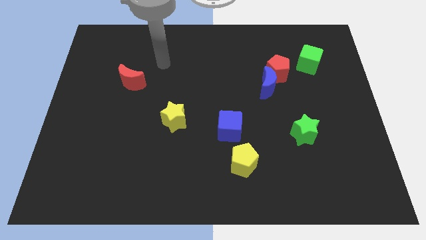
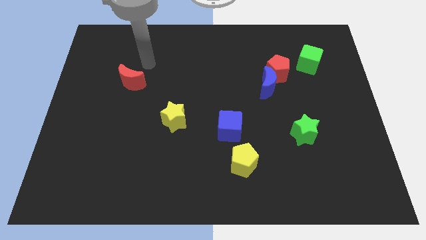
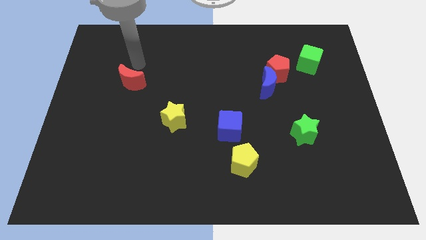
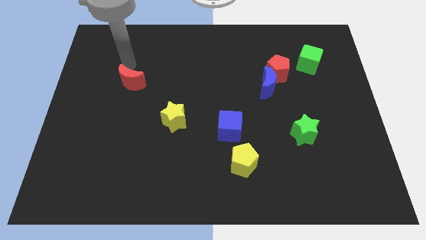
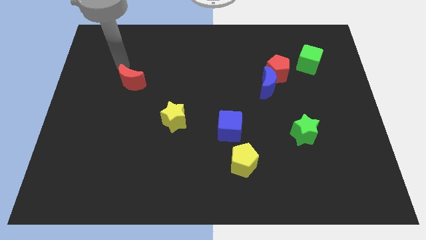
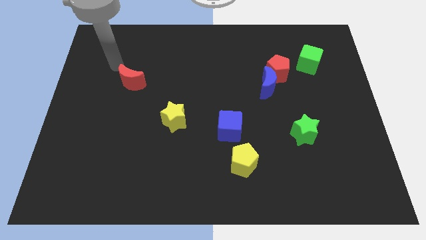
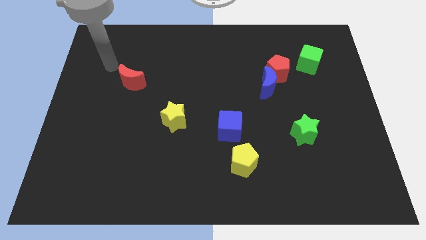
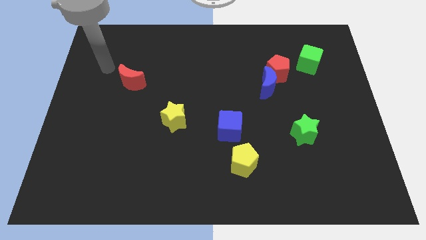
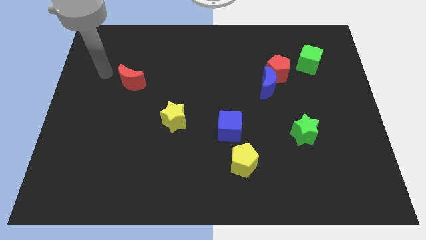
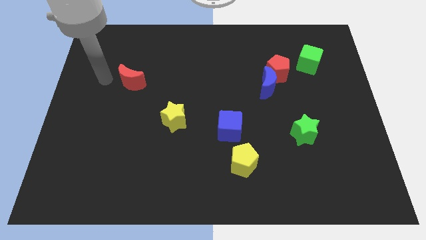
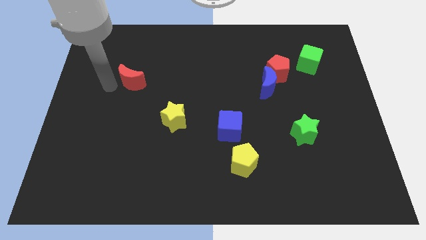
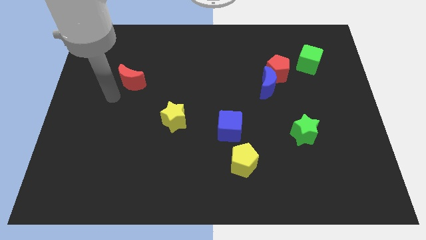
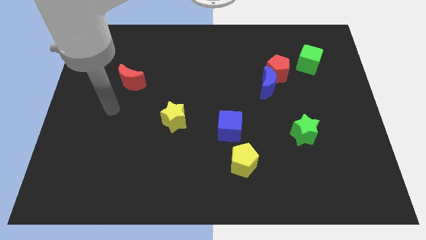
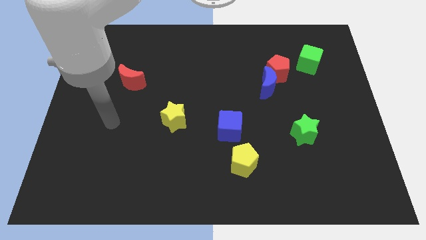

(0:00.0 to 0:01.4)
move your hand left to the yellow star

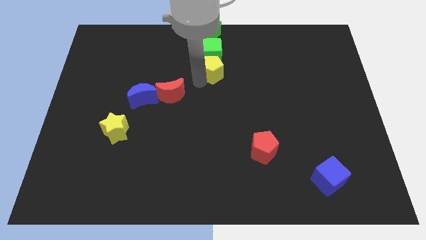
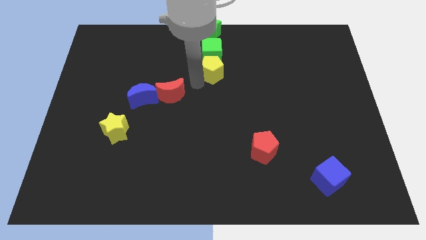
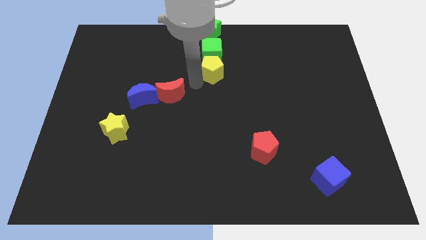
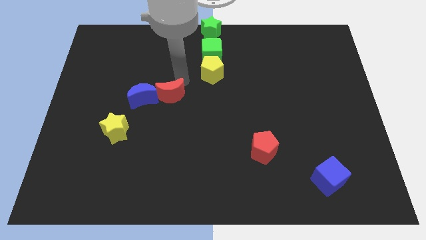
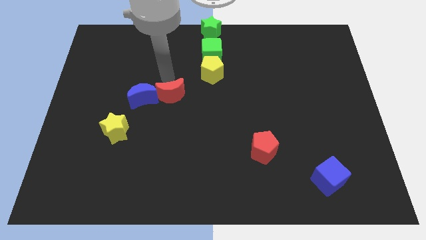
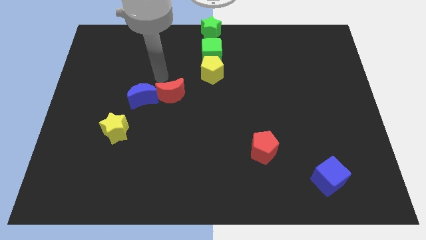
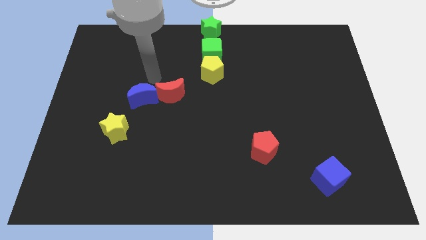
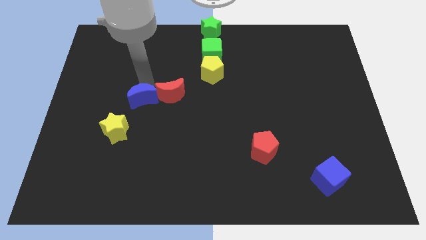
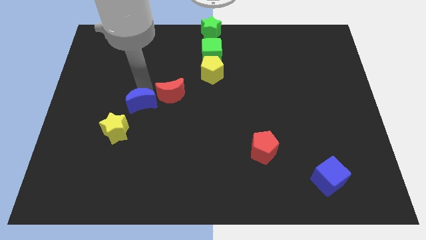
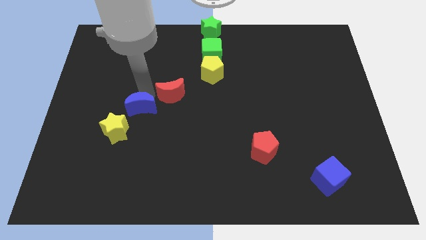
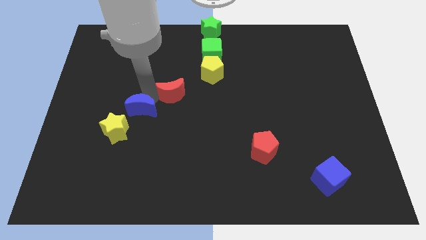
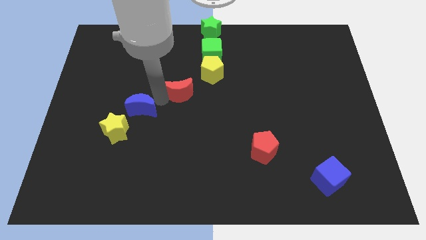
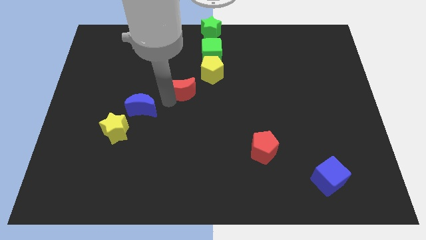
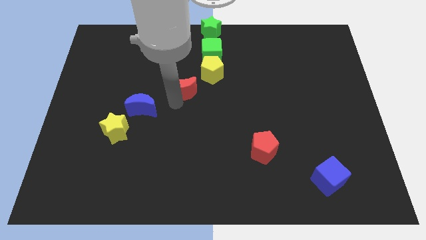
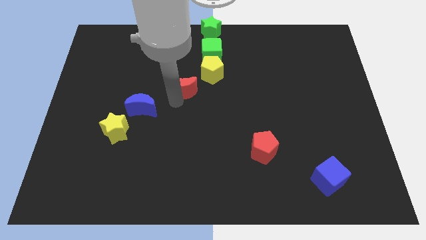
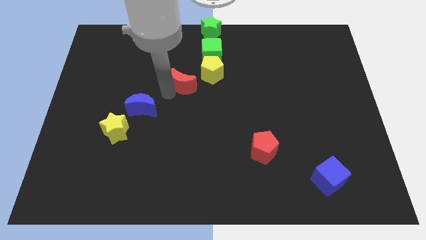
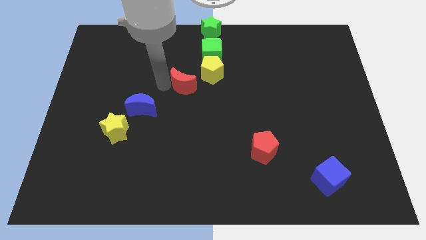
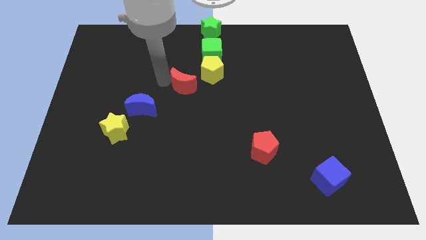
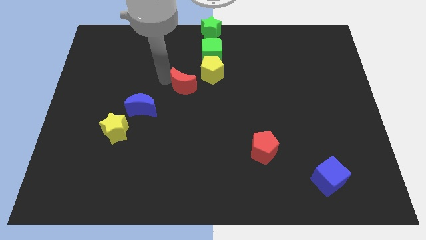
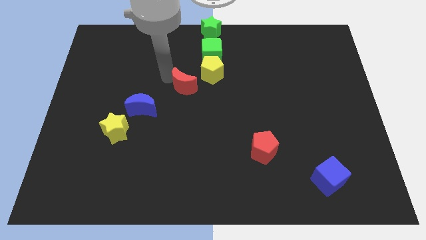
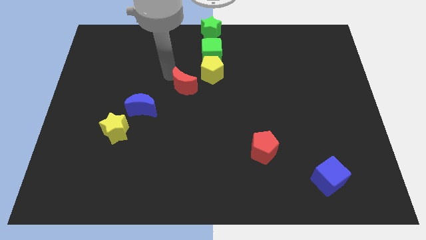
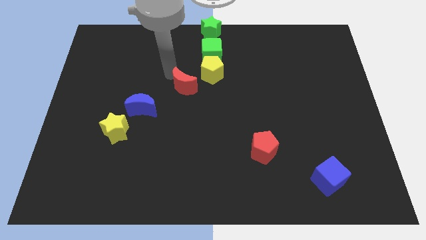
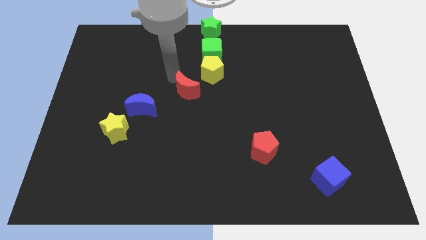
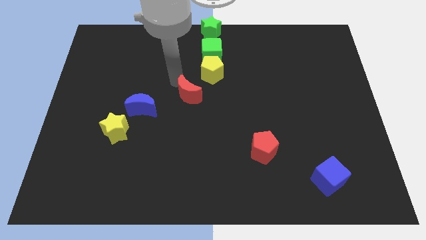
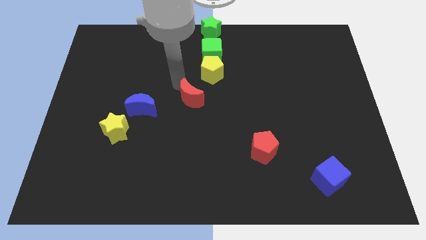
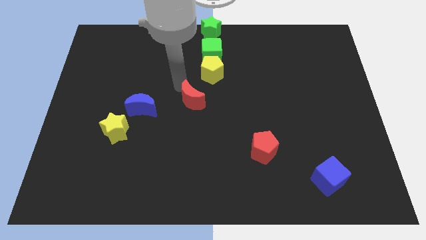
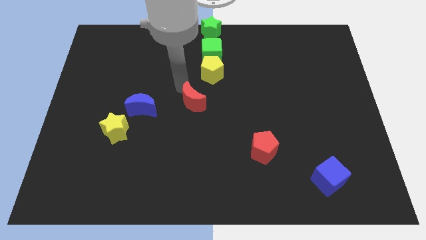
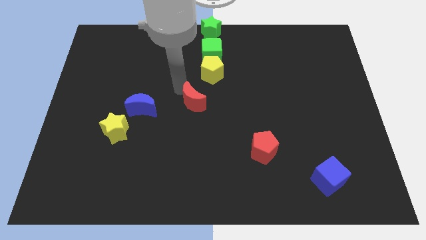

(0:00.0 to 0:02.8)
separate the red moon towards yellow pentagon diagonally

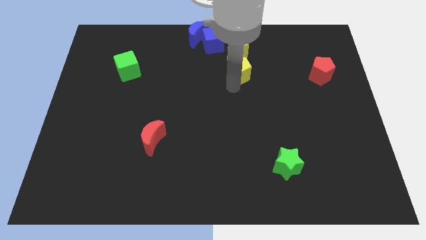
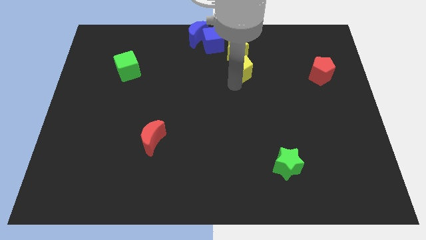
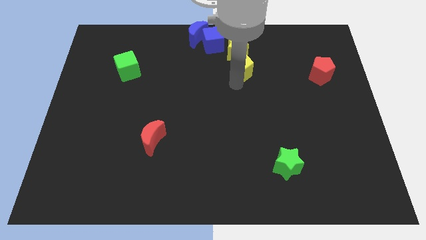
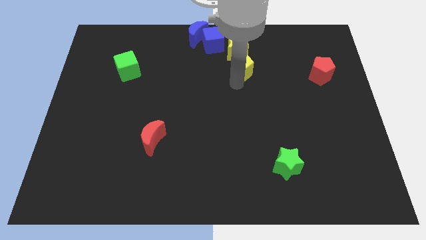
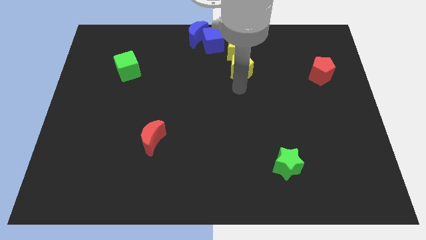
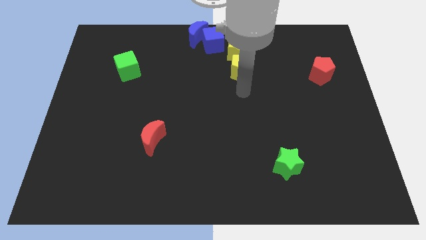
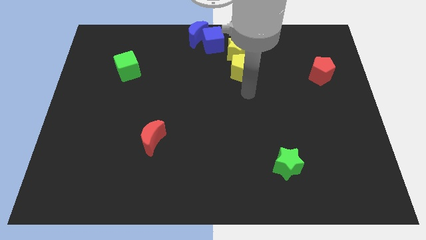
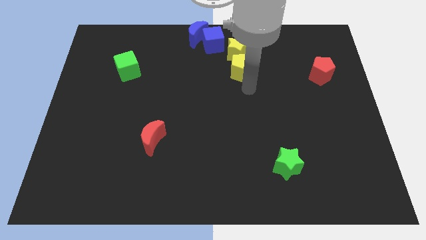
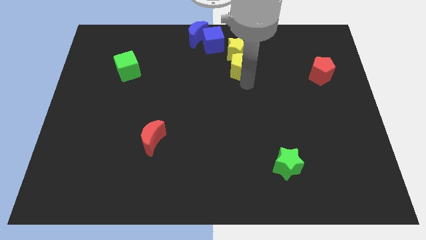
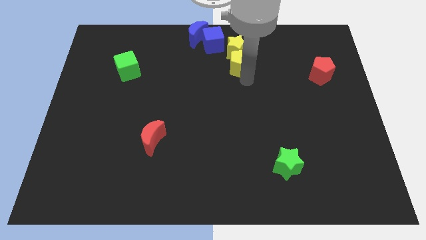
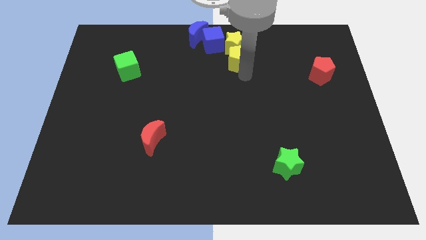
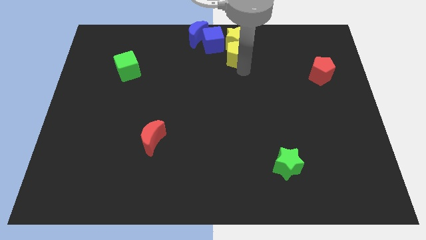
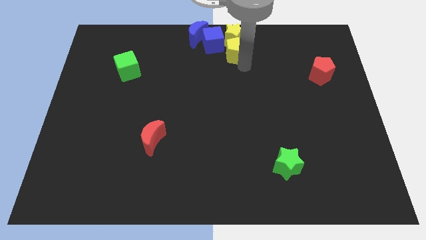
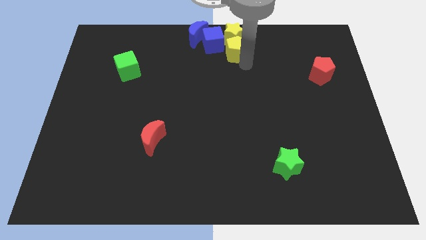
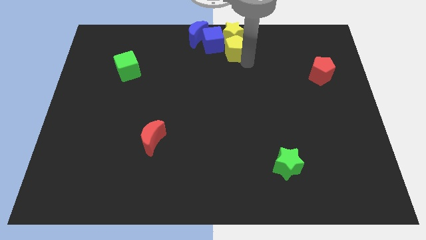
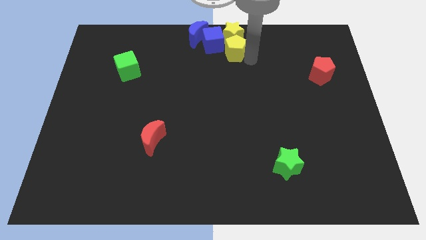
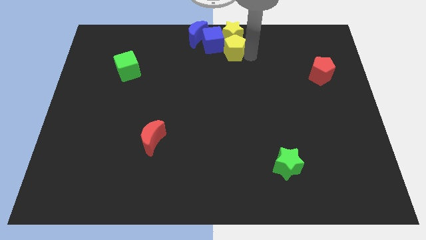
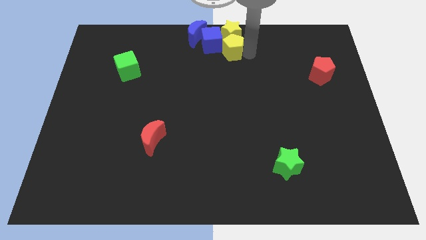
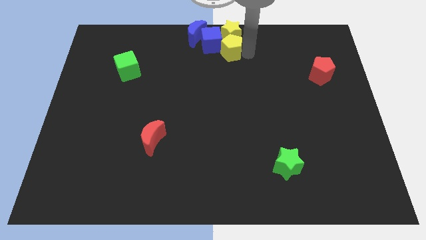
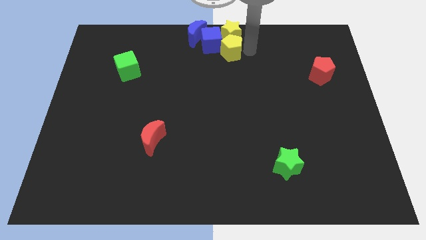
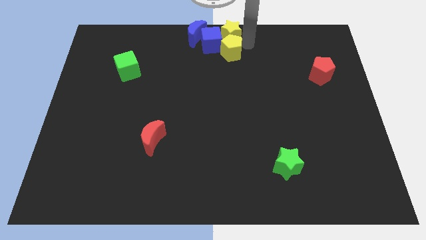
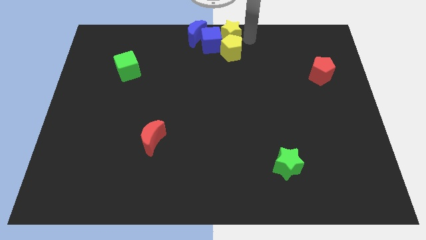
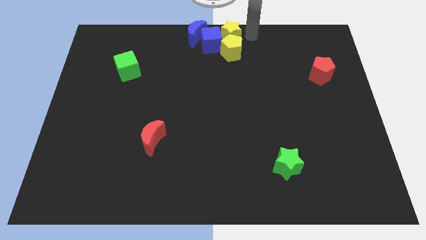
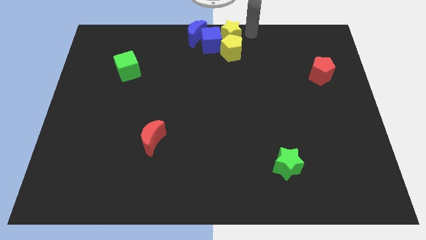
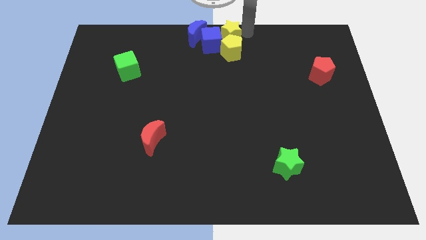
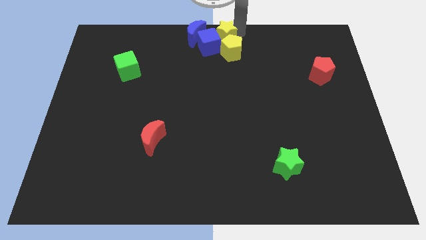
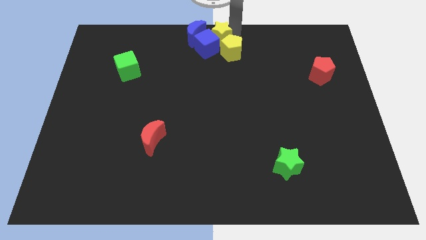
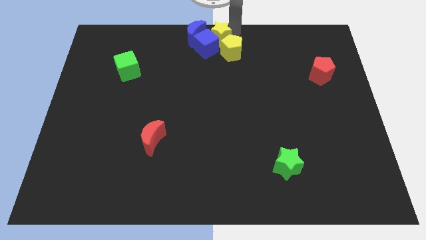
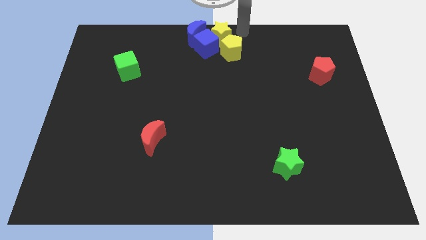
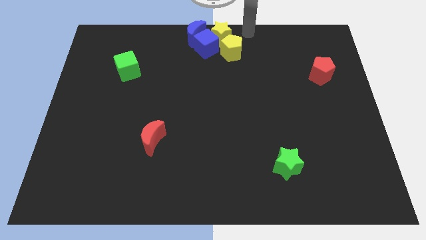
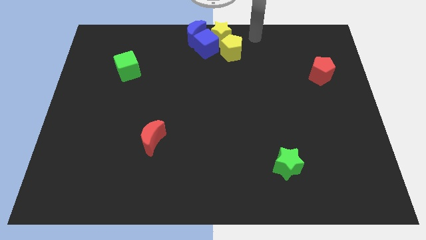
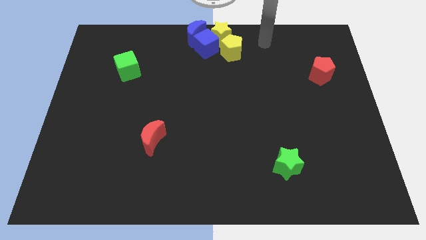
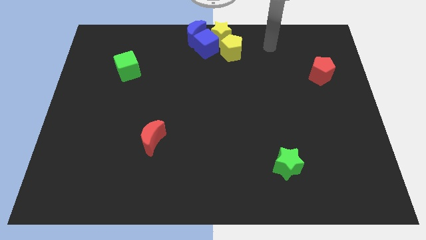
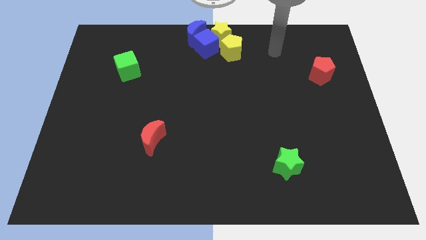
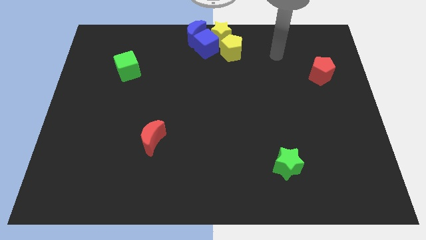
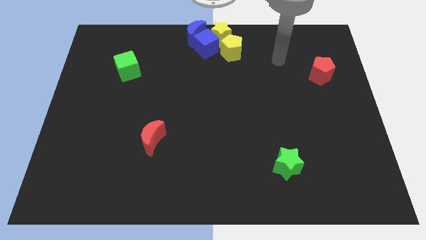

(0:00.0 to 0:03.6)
drag the yellow pentagon slightly upwards

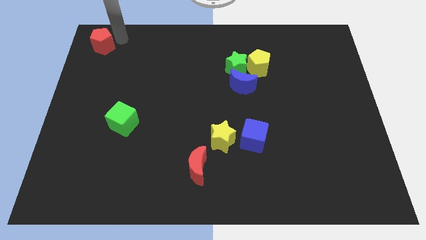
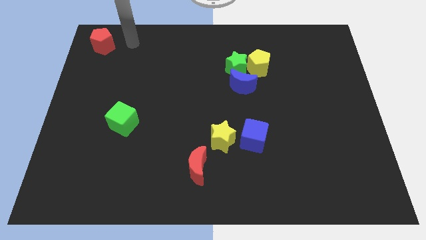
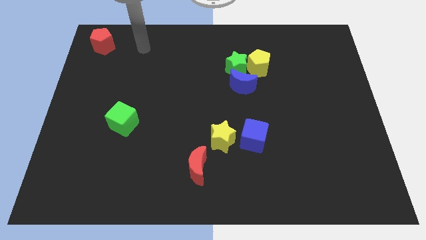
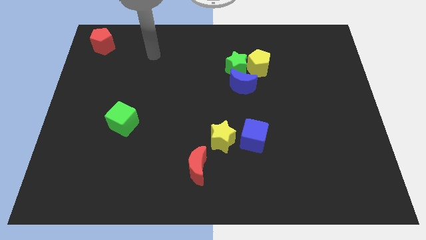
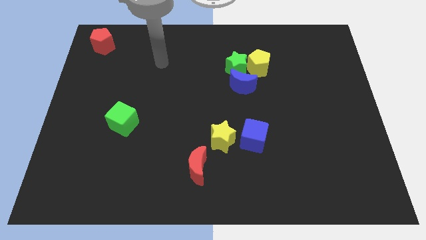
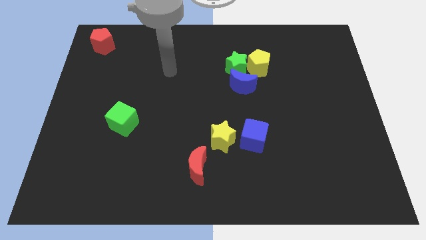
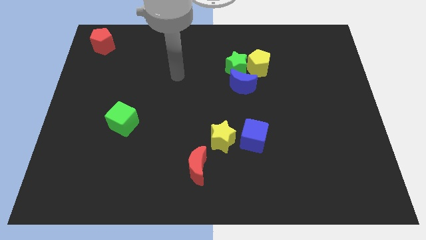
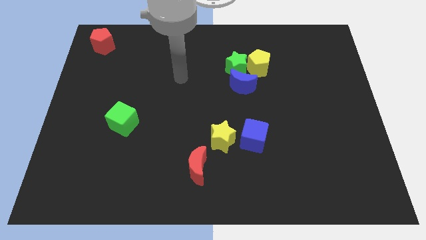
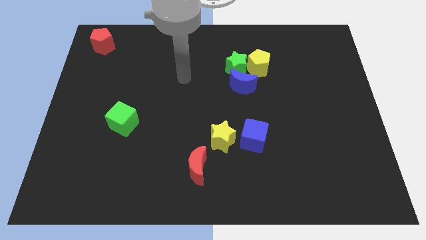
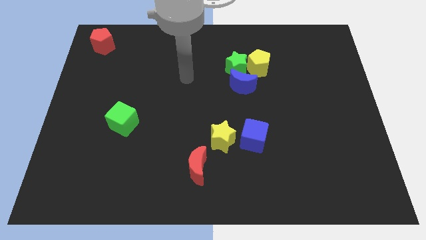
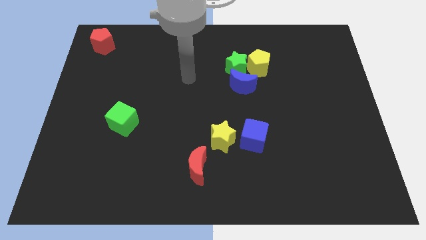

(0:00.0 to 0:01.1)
move your hand away from the red pentagon
